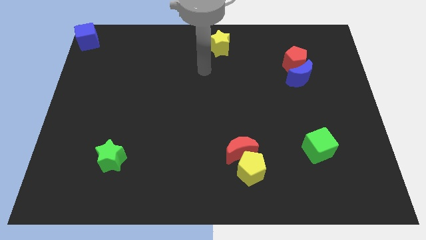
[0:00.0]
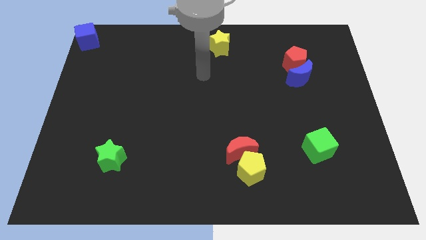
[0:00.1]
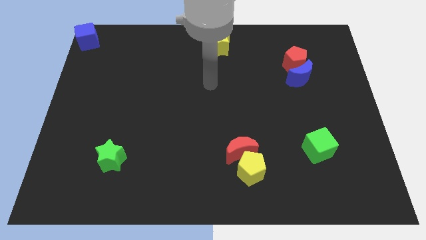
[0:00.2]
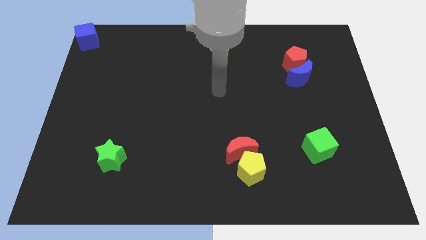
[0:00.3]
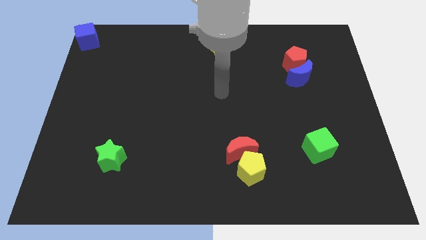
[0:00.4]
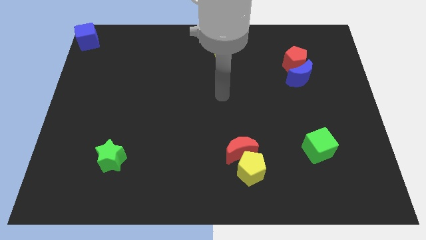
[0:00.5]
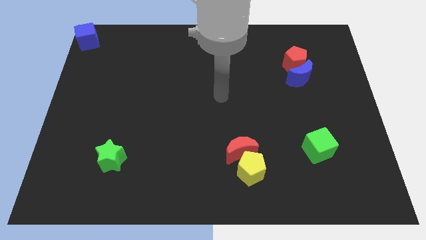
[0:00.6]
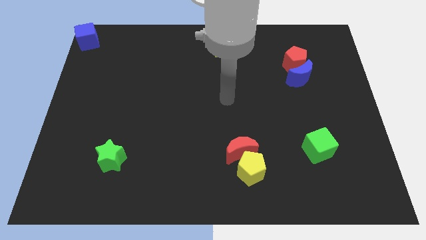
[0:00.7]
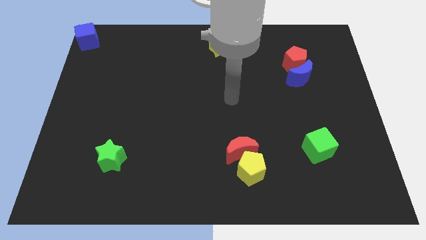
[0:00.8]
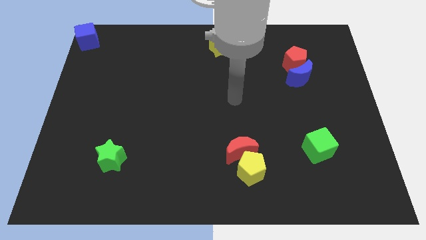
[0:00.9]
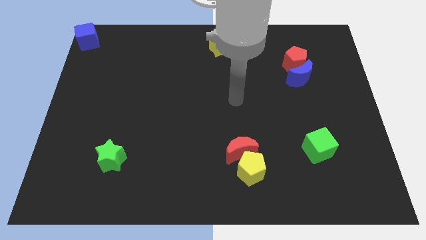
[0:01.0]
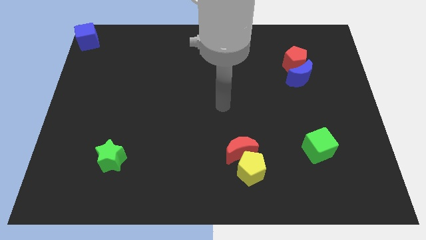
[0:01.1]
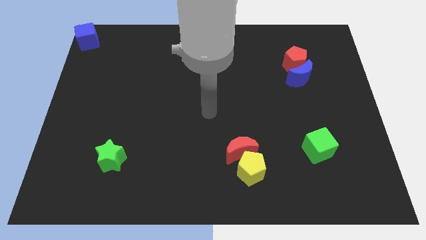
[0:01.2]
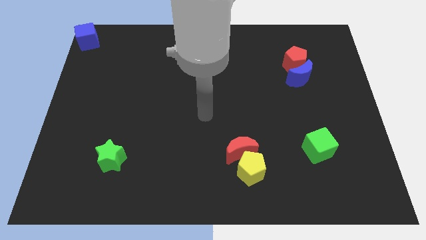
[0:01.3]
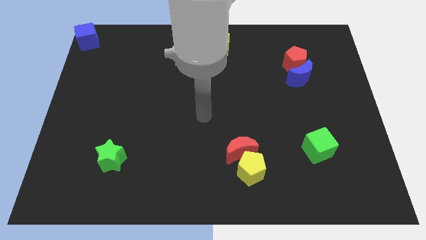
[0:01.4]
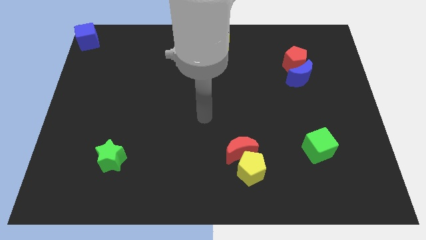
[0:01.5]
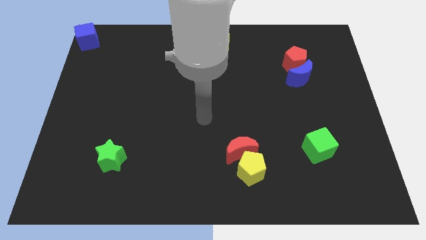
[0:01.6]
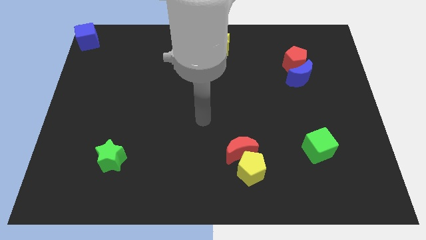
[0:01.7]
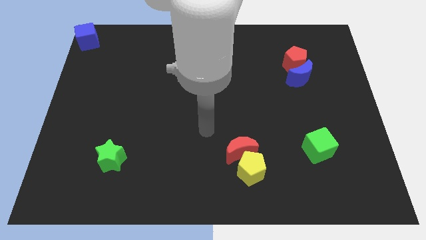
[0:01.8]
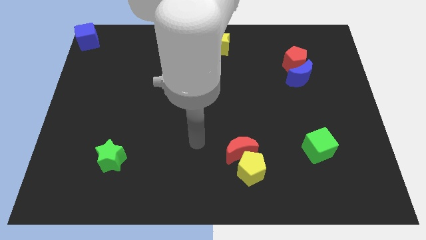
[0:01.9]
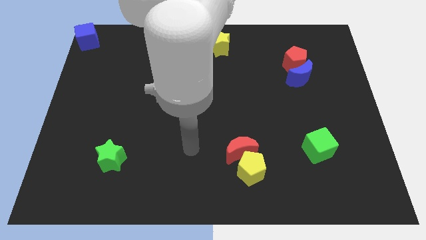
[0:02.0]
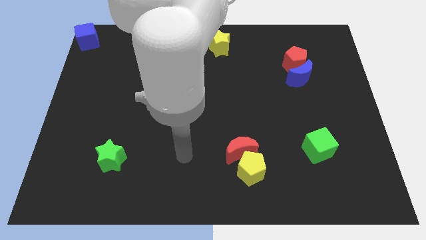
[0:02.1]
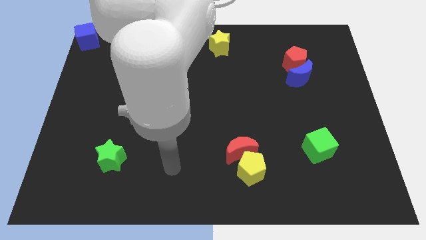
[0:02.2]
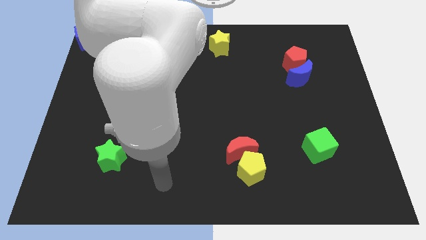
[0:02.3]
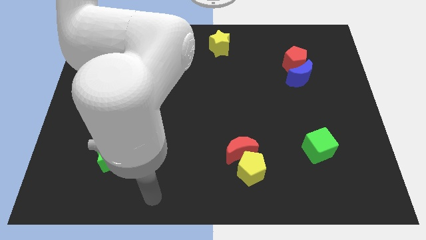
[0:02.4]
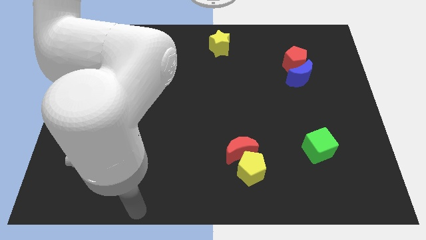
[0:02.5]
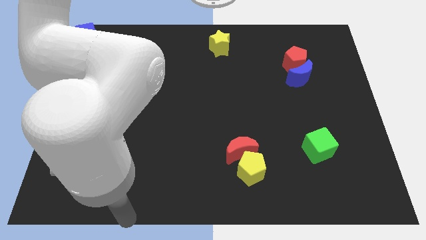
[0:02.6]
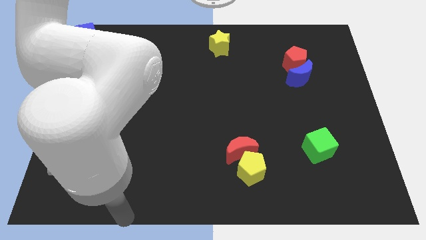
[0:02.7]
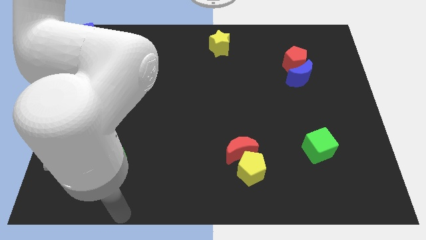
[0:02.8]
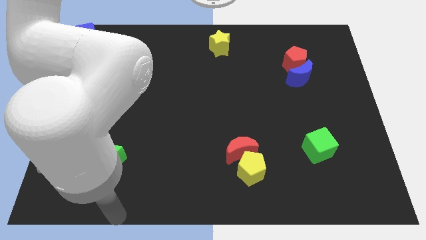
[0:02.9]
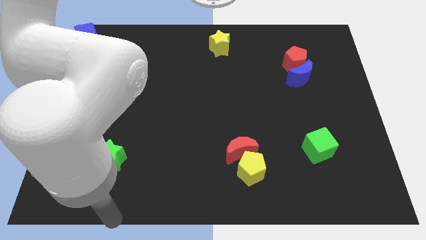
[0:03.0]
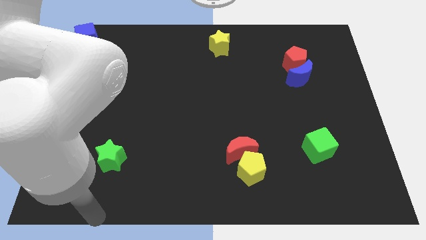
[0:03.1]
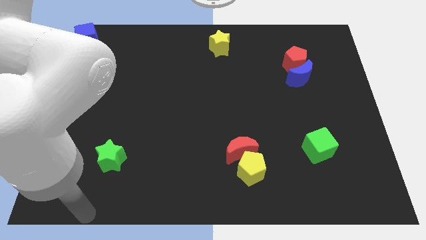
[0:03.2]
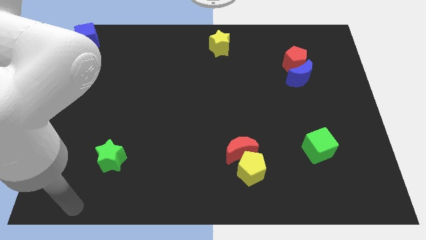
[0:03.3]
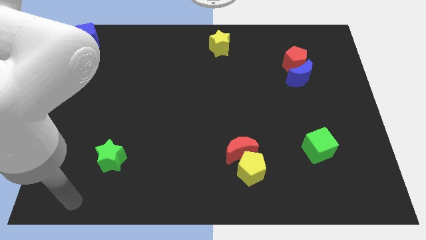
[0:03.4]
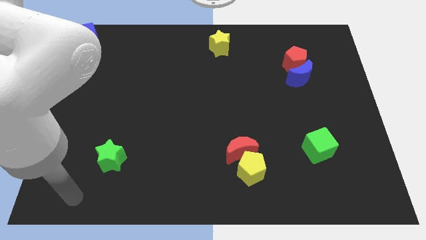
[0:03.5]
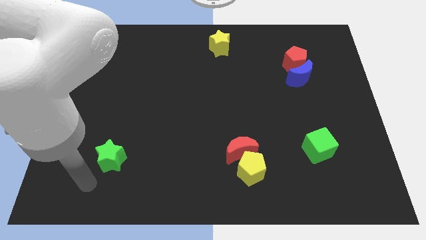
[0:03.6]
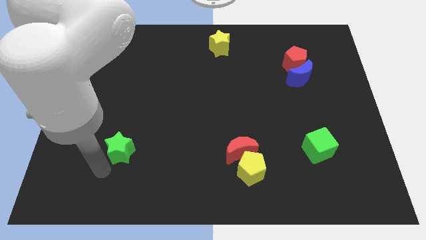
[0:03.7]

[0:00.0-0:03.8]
move the arm below to the green star

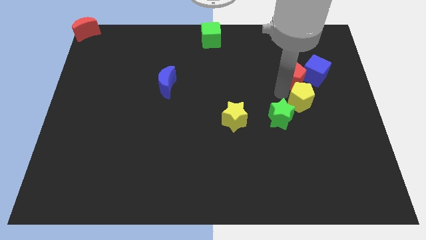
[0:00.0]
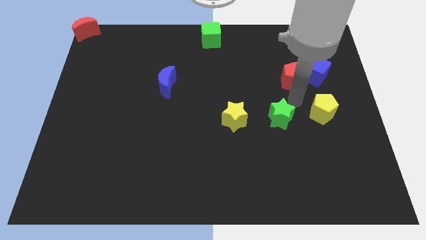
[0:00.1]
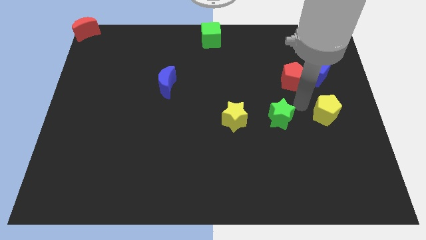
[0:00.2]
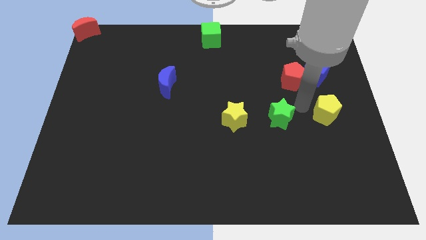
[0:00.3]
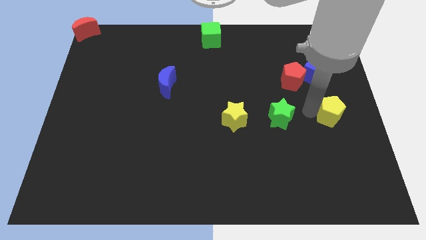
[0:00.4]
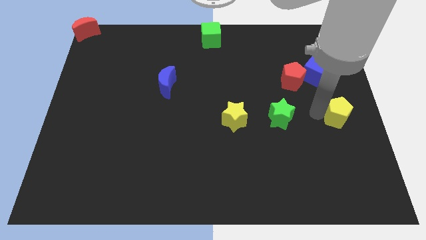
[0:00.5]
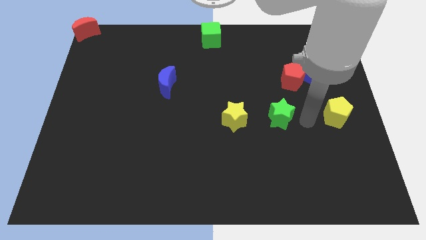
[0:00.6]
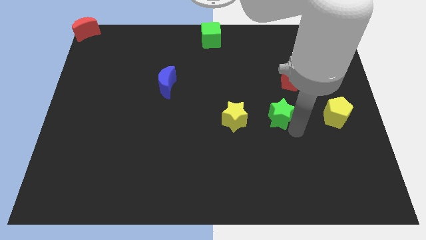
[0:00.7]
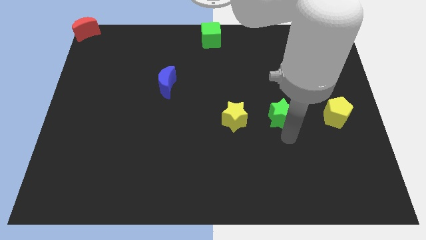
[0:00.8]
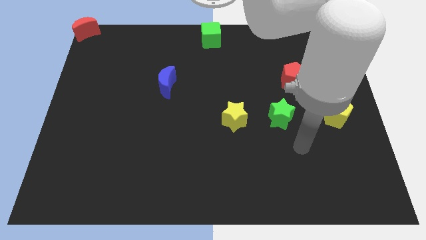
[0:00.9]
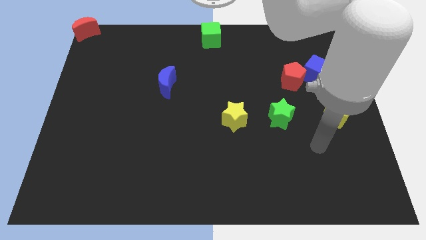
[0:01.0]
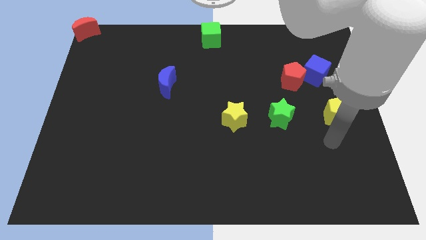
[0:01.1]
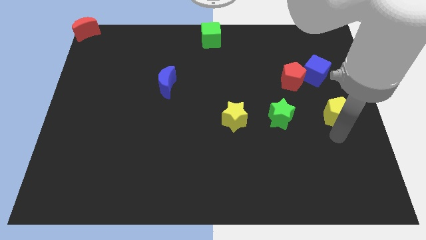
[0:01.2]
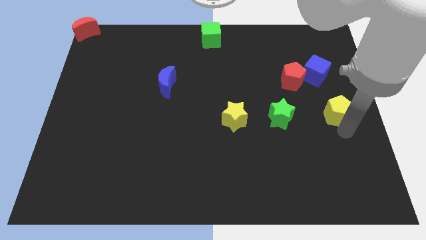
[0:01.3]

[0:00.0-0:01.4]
place the yellow pentagon right to the green star

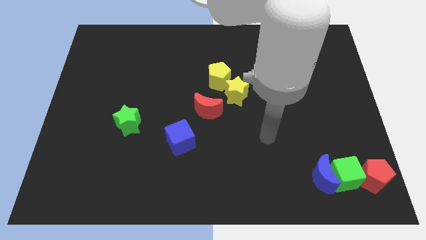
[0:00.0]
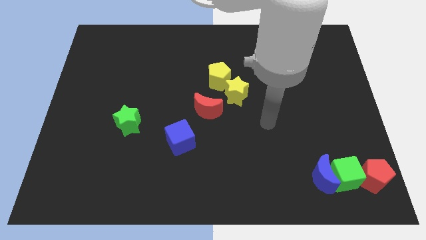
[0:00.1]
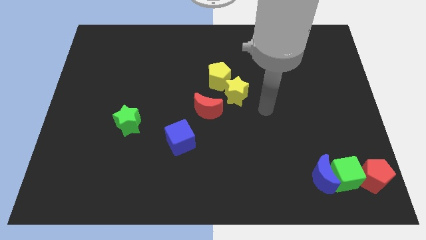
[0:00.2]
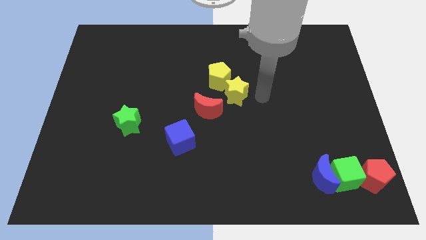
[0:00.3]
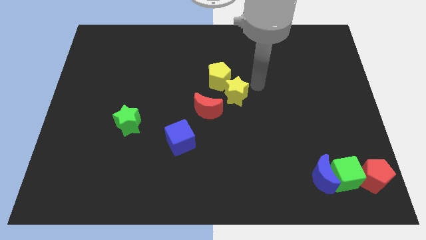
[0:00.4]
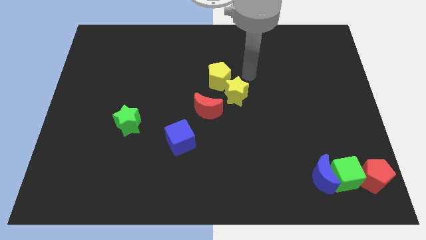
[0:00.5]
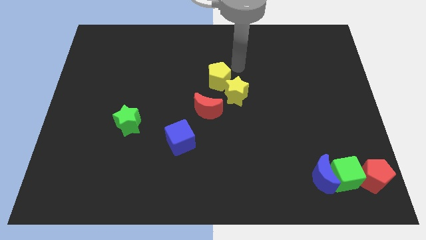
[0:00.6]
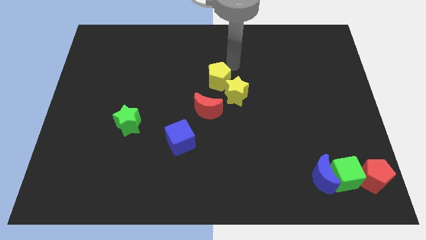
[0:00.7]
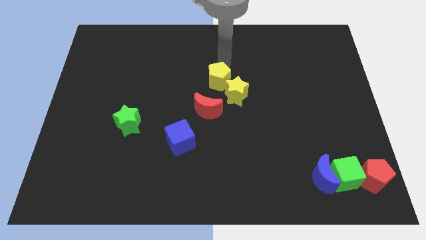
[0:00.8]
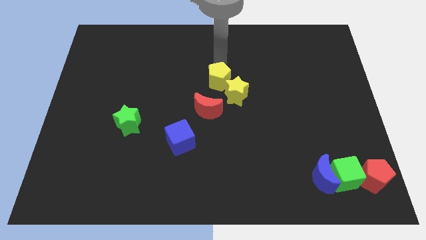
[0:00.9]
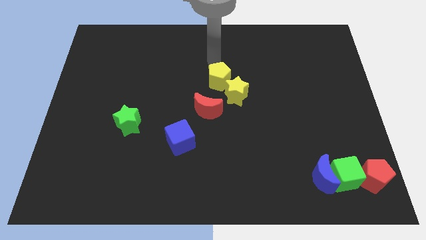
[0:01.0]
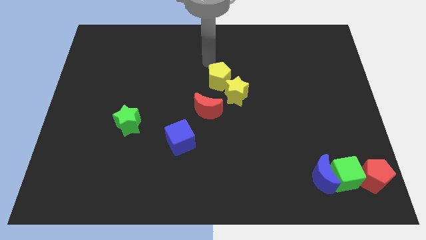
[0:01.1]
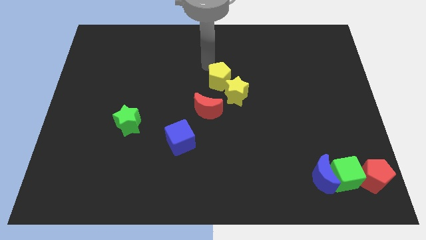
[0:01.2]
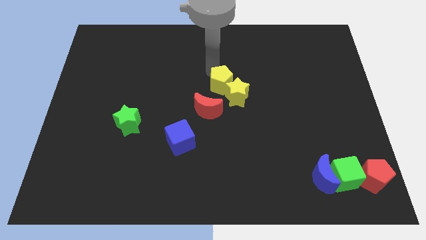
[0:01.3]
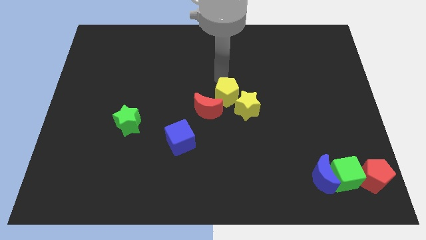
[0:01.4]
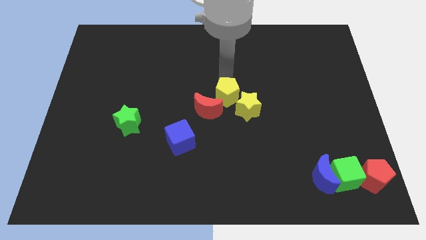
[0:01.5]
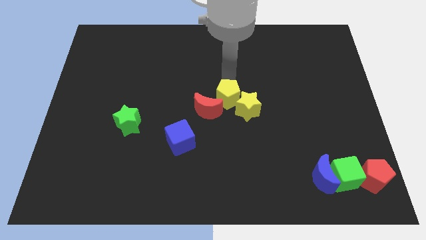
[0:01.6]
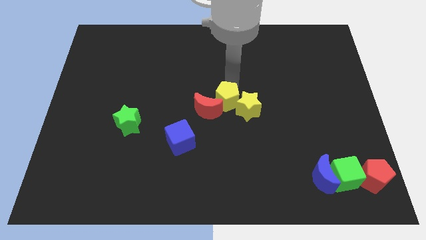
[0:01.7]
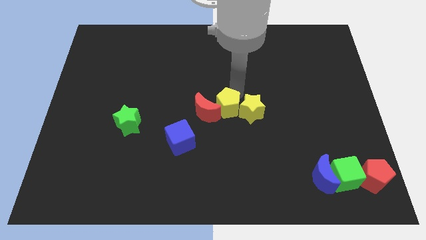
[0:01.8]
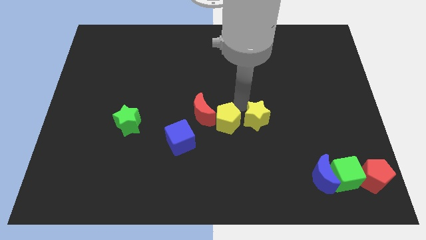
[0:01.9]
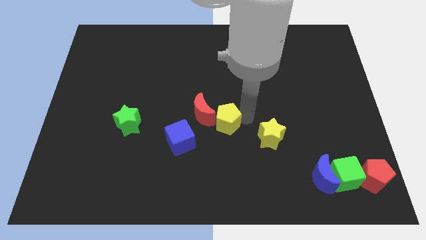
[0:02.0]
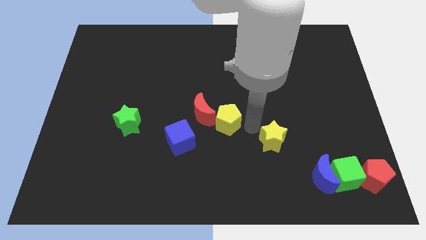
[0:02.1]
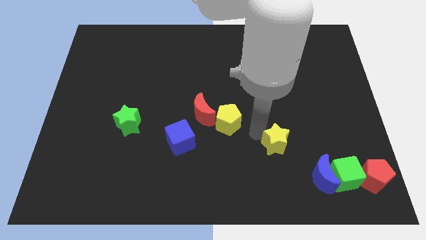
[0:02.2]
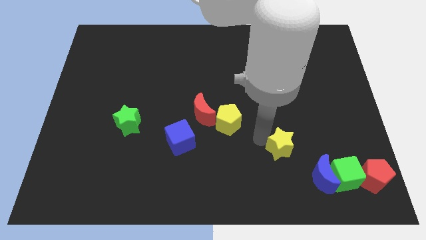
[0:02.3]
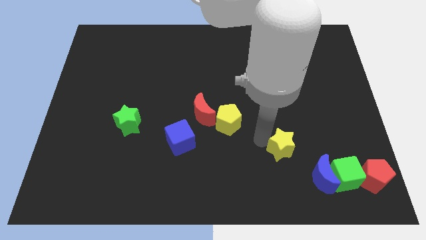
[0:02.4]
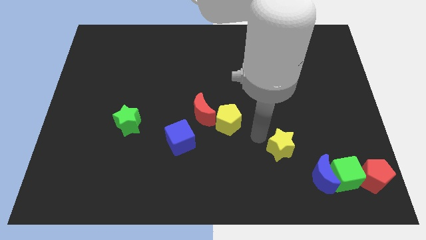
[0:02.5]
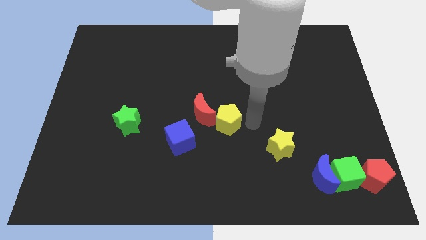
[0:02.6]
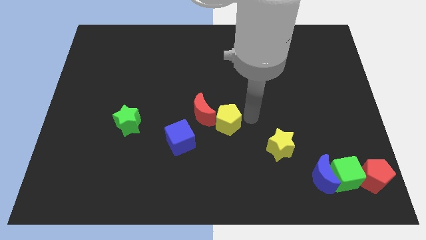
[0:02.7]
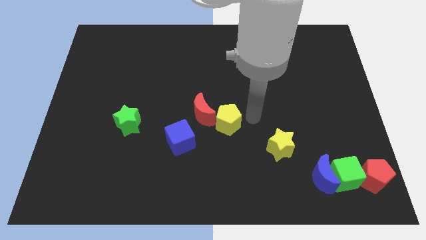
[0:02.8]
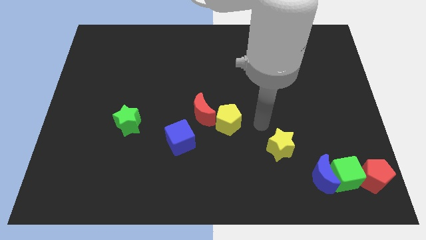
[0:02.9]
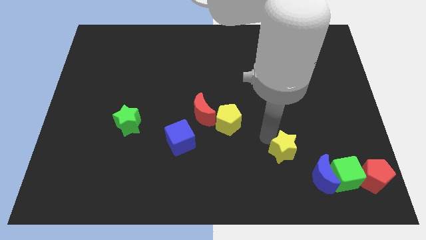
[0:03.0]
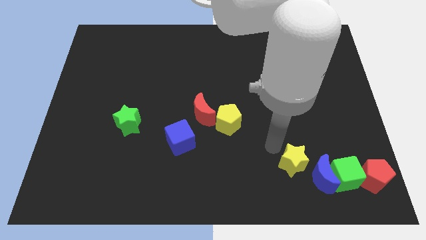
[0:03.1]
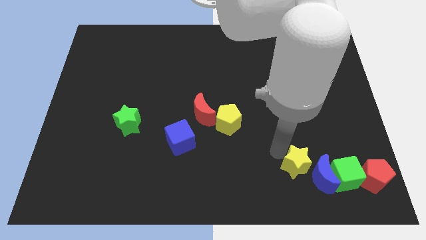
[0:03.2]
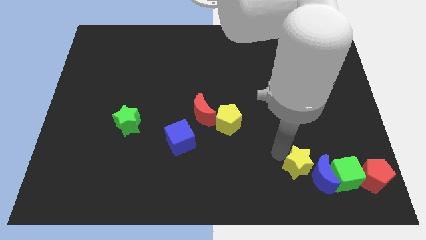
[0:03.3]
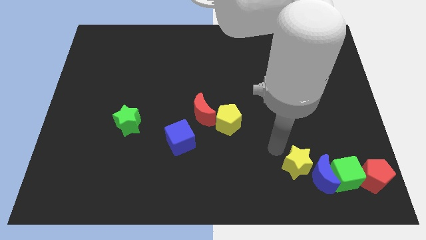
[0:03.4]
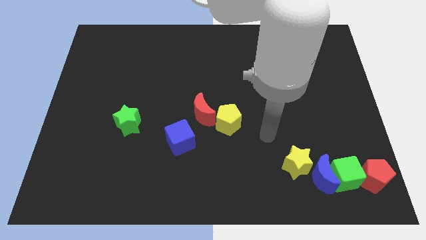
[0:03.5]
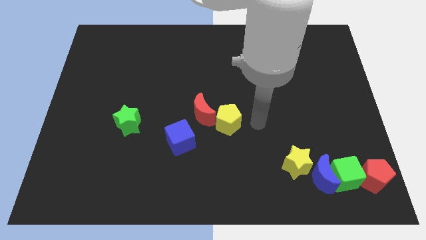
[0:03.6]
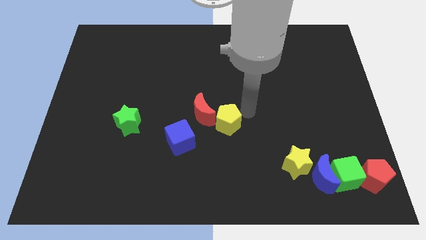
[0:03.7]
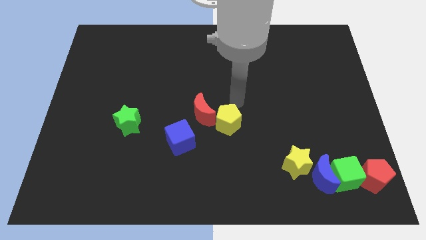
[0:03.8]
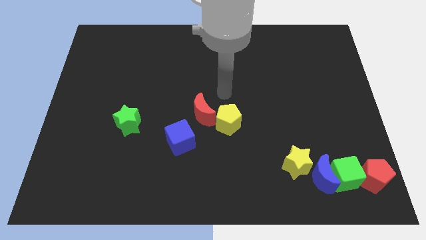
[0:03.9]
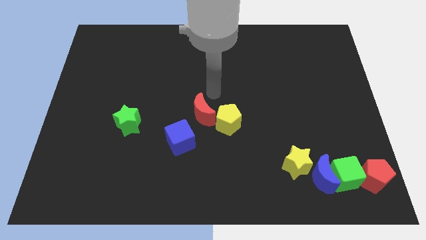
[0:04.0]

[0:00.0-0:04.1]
push yellow star towards blue moon
